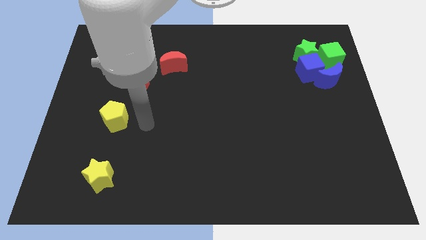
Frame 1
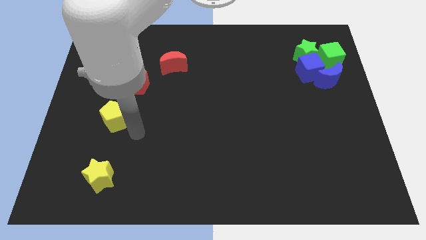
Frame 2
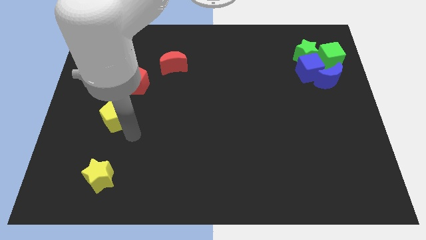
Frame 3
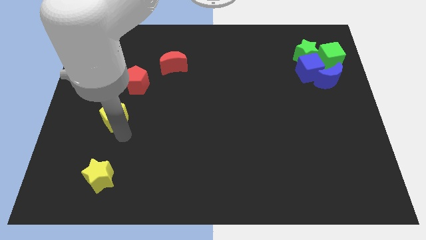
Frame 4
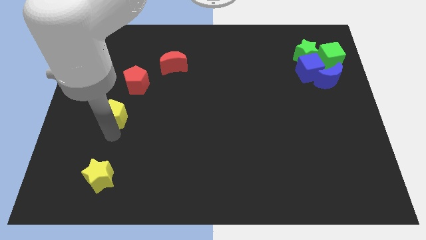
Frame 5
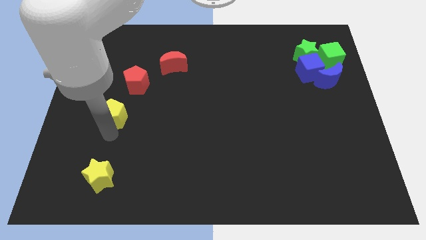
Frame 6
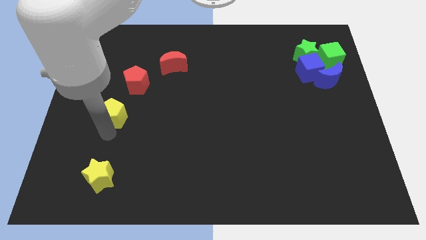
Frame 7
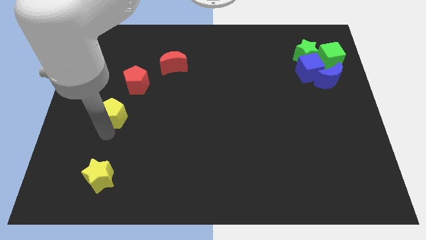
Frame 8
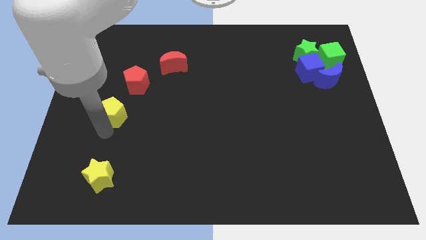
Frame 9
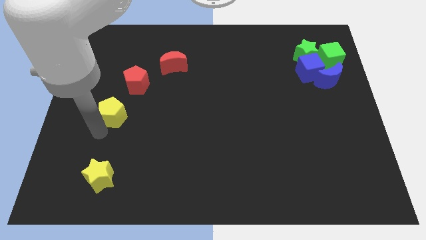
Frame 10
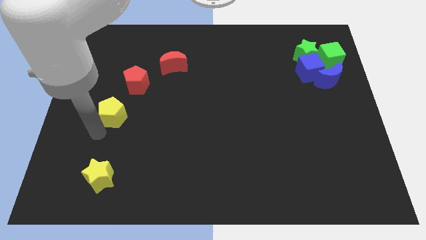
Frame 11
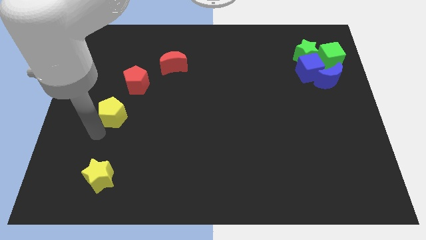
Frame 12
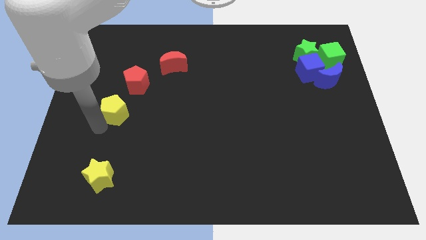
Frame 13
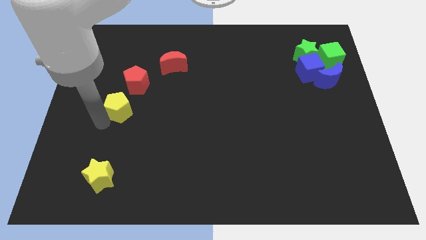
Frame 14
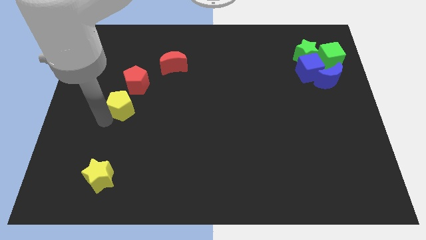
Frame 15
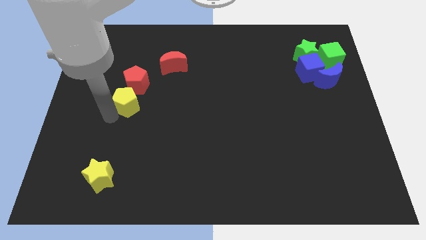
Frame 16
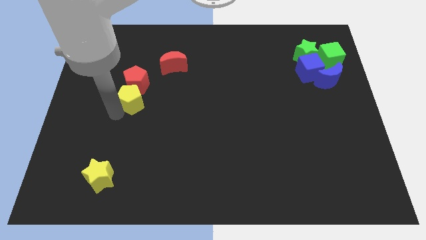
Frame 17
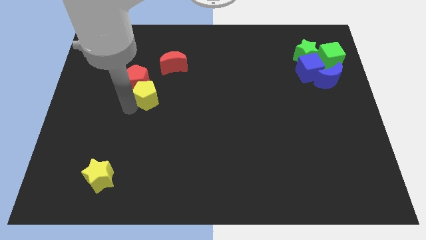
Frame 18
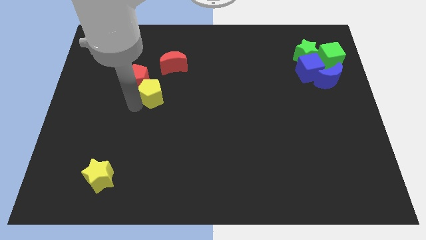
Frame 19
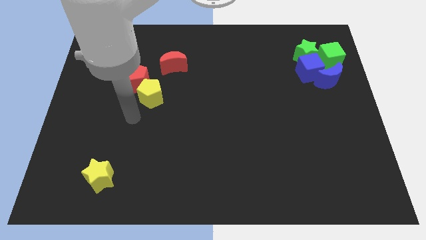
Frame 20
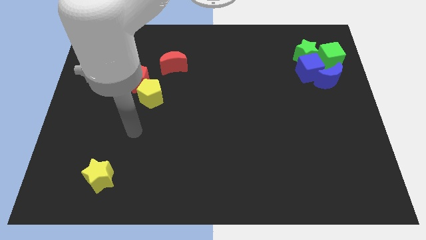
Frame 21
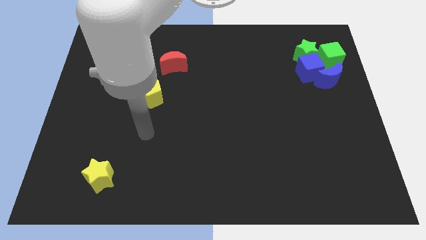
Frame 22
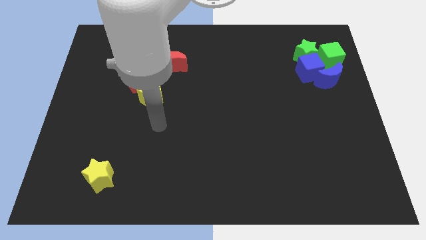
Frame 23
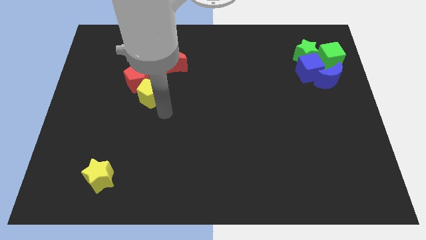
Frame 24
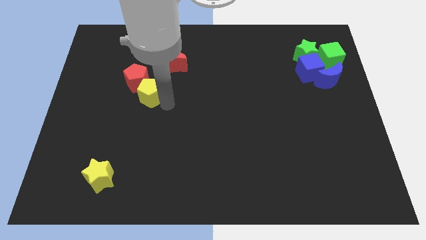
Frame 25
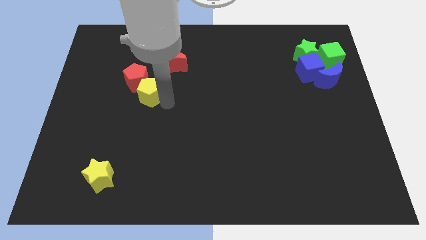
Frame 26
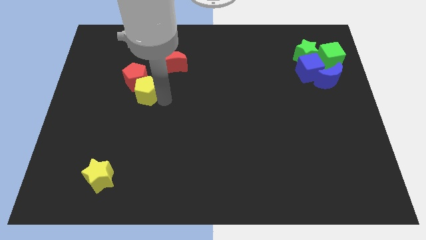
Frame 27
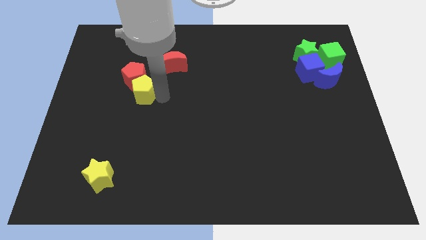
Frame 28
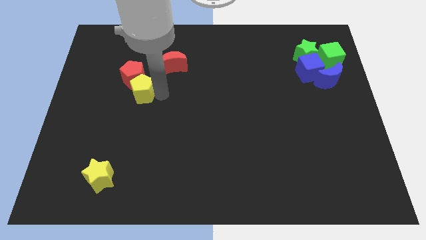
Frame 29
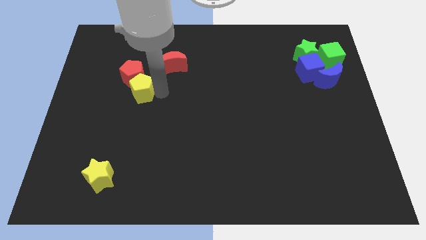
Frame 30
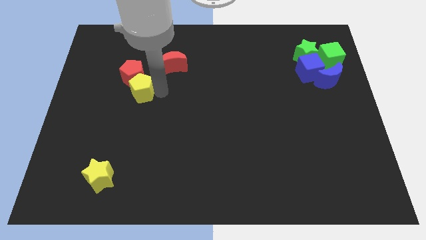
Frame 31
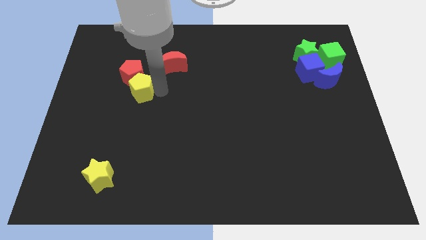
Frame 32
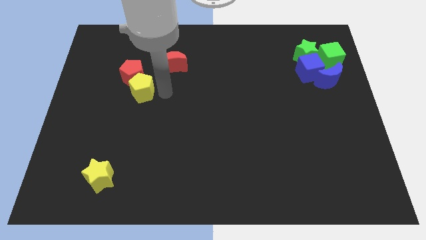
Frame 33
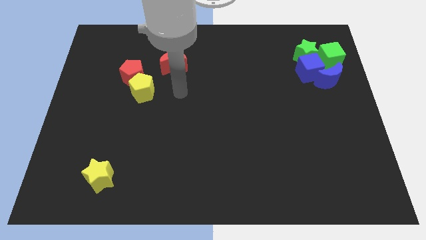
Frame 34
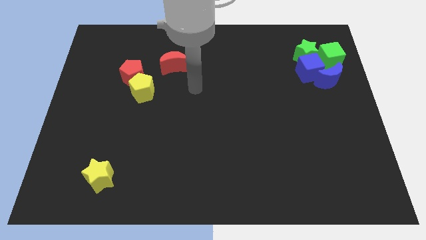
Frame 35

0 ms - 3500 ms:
push the pentagons towards the top left corner of the board

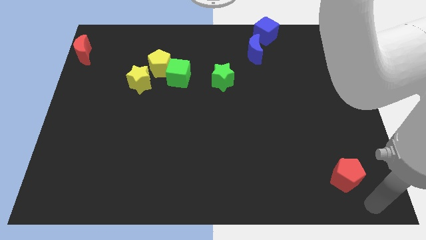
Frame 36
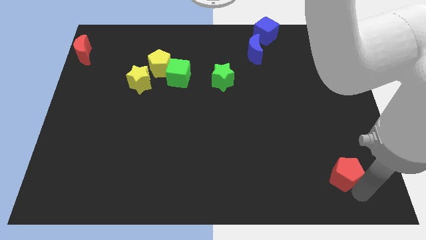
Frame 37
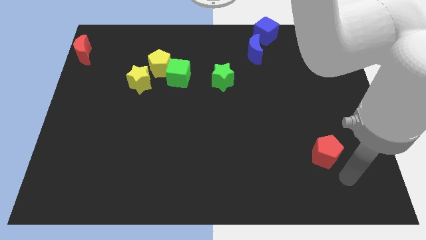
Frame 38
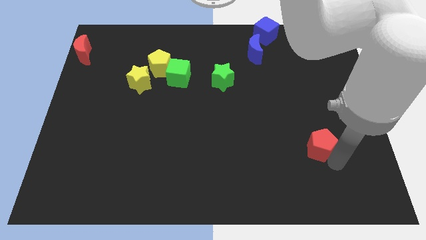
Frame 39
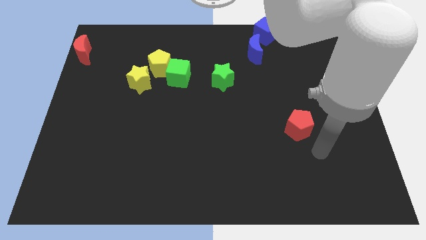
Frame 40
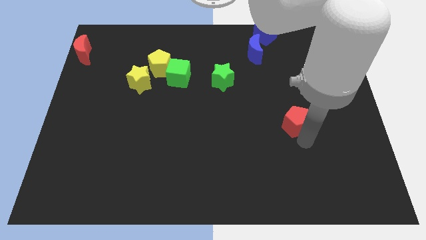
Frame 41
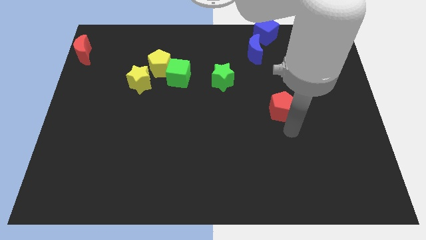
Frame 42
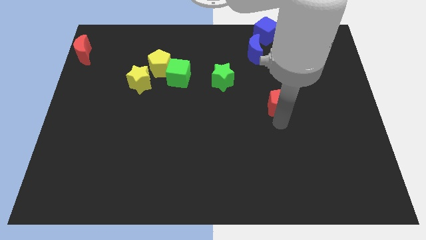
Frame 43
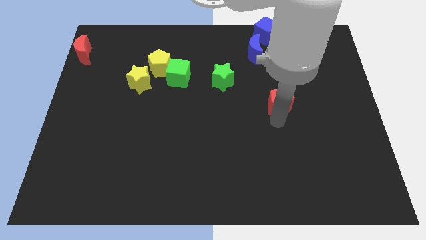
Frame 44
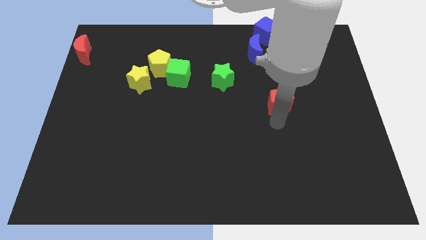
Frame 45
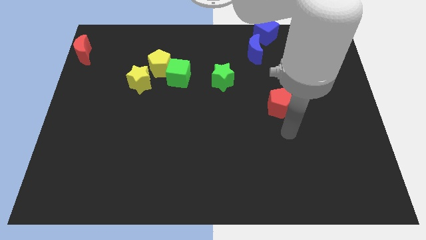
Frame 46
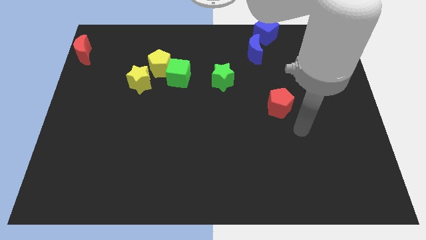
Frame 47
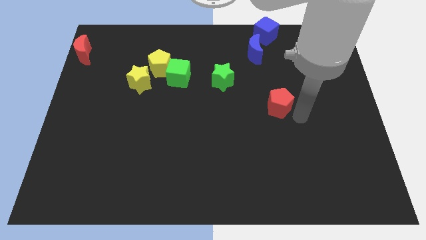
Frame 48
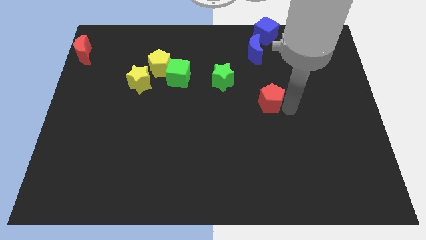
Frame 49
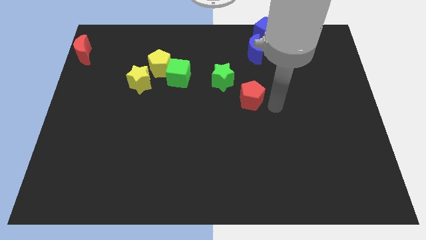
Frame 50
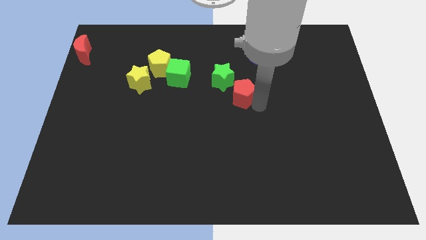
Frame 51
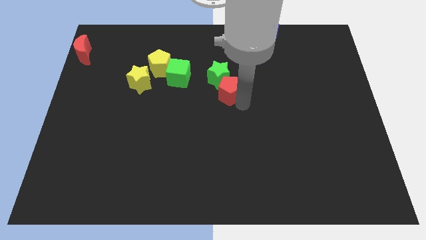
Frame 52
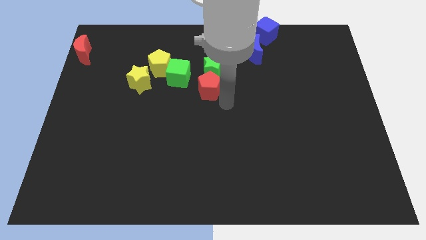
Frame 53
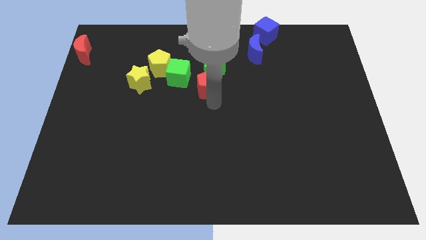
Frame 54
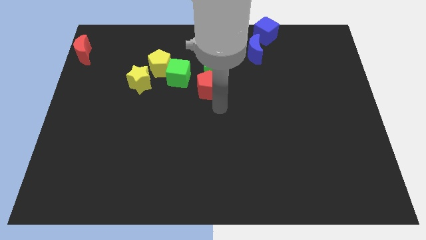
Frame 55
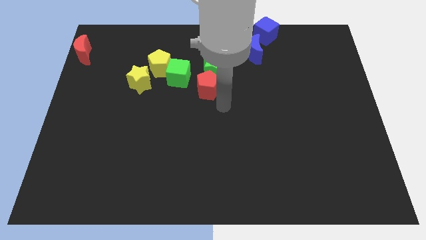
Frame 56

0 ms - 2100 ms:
push green star with red pentagon

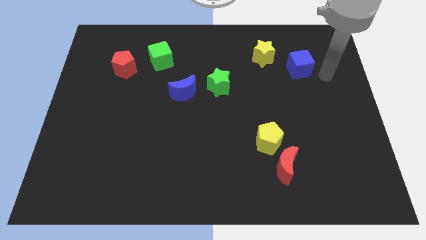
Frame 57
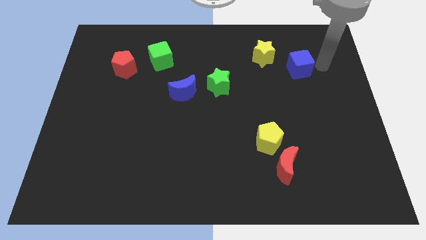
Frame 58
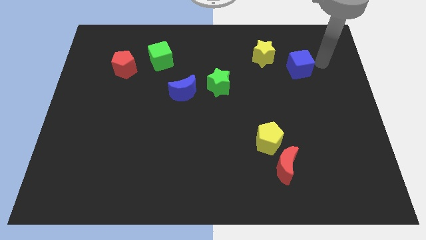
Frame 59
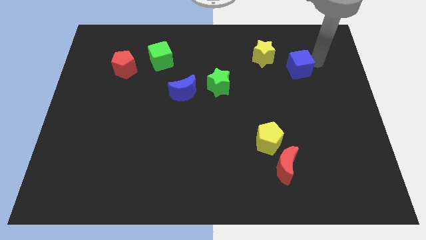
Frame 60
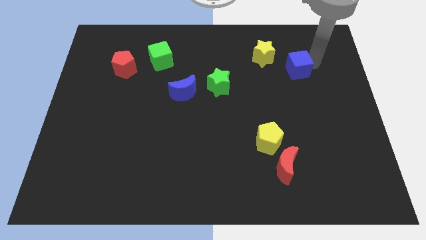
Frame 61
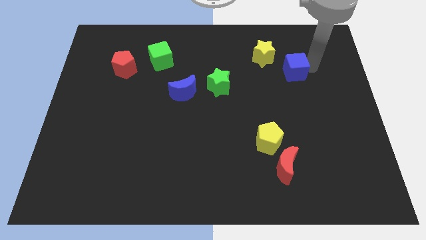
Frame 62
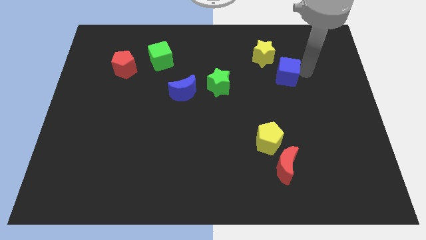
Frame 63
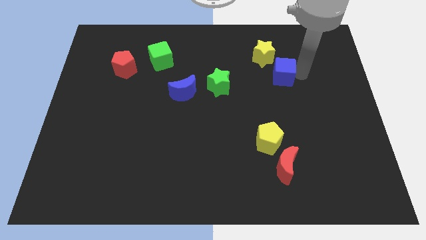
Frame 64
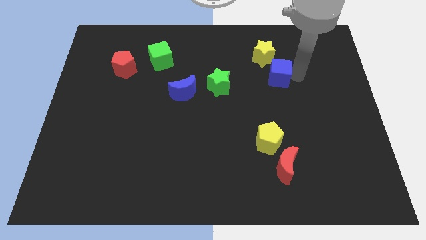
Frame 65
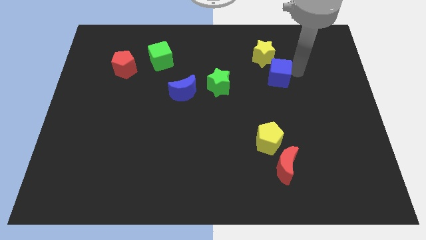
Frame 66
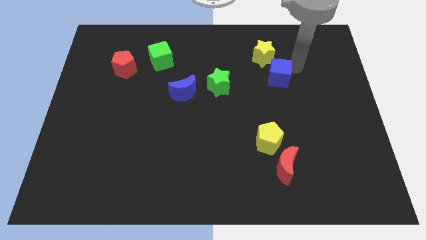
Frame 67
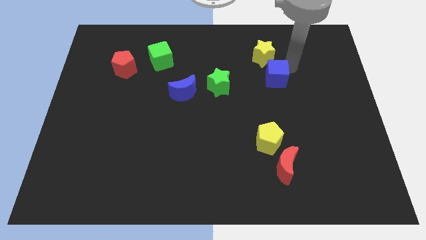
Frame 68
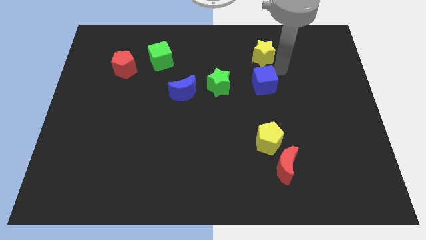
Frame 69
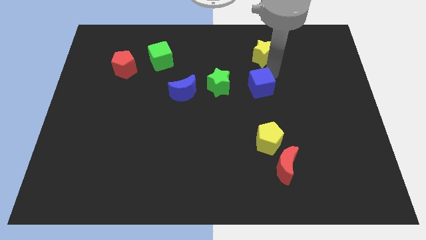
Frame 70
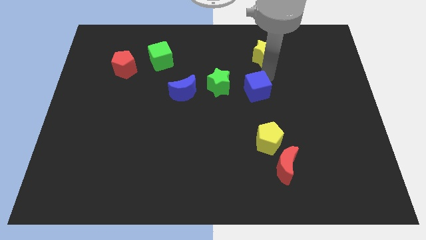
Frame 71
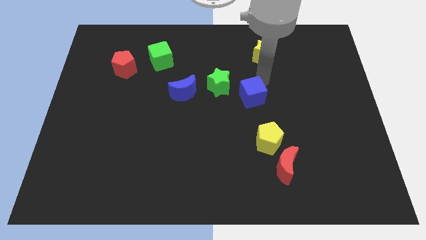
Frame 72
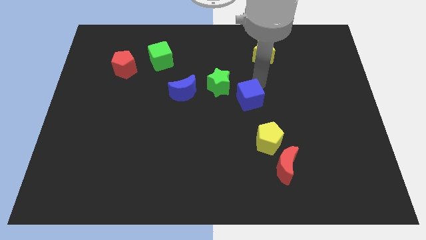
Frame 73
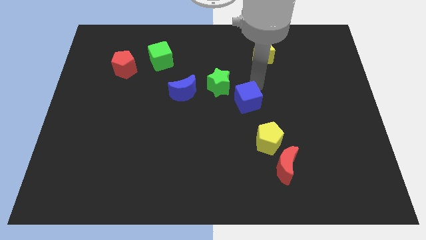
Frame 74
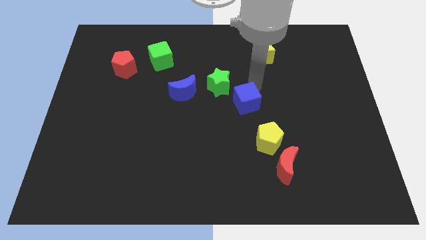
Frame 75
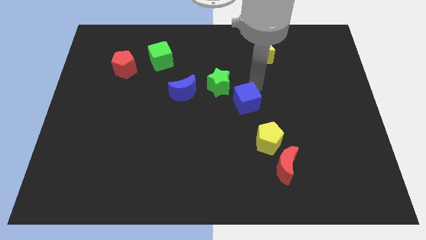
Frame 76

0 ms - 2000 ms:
place the blue cube in between the green star and the yellow pentagon

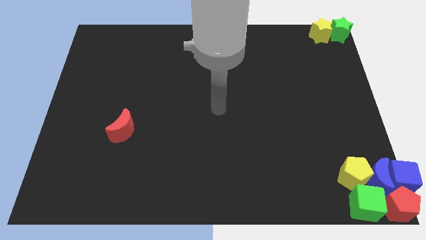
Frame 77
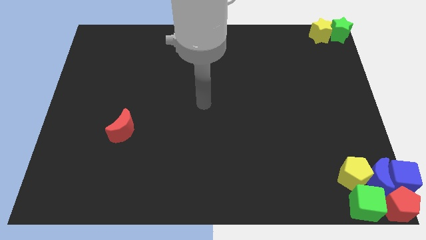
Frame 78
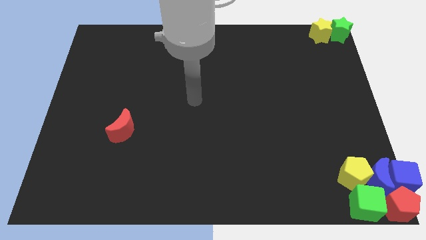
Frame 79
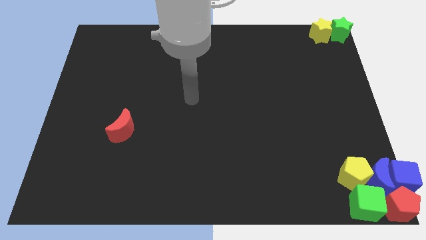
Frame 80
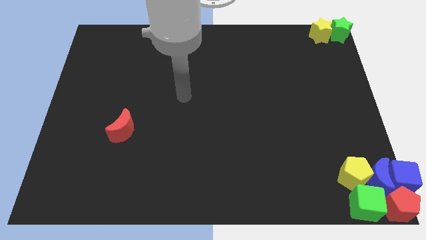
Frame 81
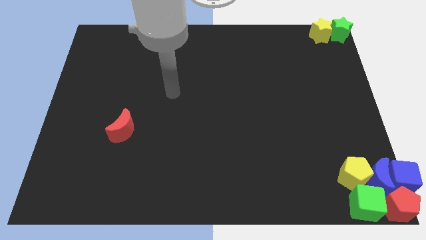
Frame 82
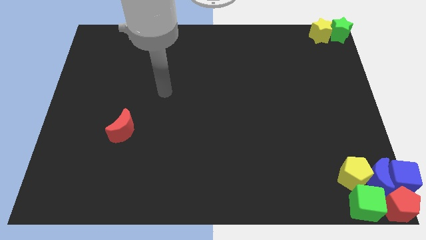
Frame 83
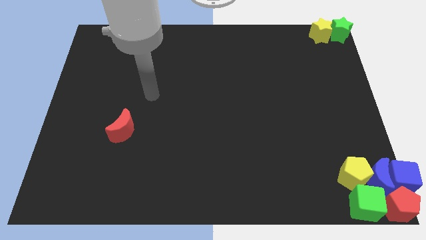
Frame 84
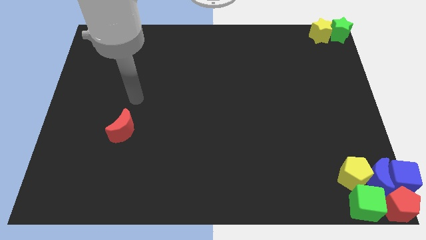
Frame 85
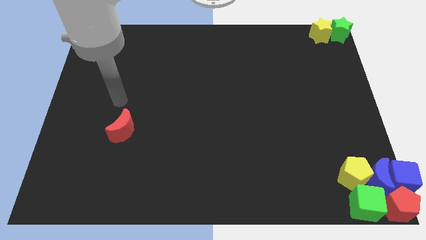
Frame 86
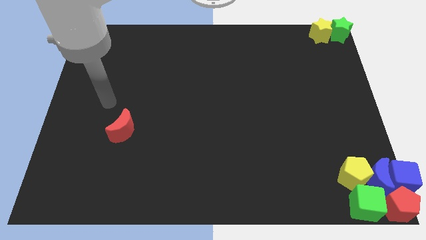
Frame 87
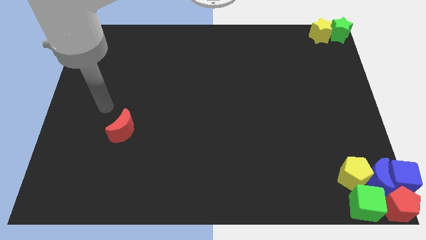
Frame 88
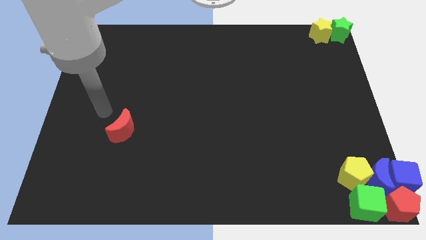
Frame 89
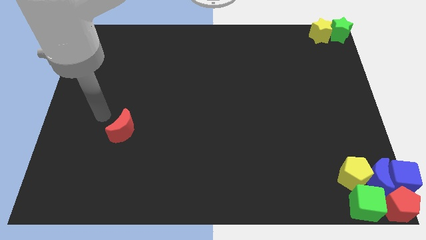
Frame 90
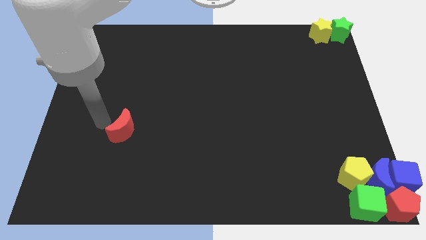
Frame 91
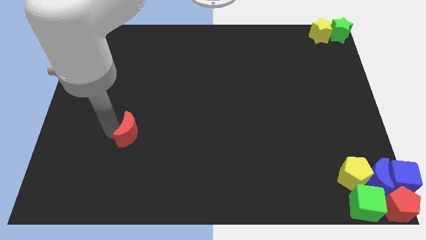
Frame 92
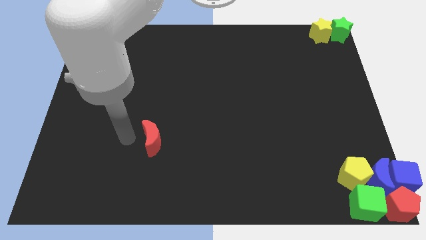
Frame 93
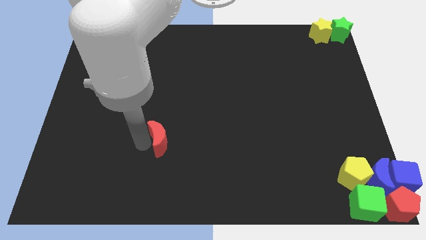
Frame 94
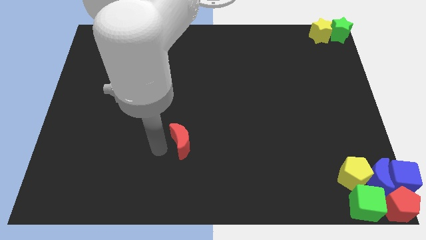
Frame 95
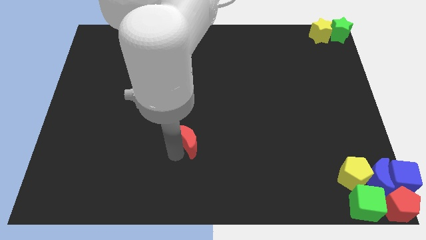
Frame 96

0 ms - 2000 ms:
move the red moon slightly to the right side
